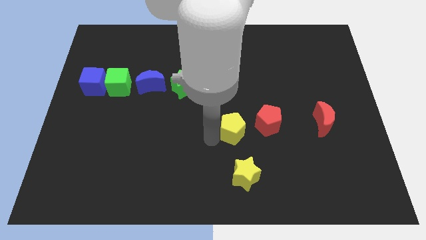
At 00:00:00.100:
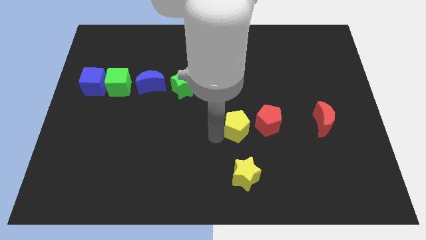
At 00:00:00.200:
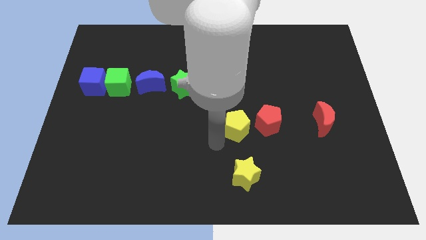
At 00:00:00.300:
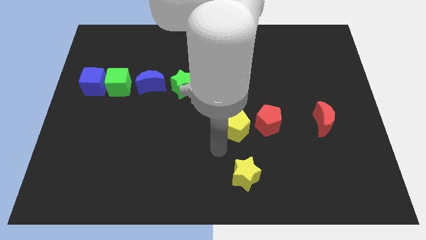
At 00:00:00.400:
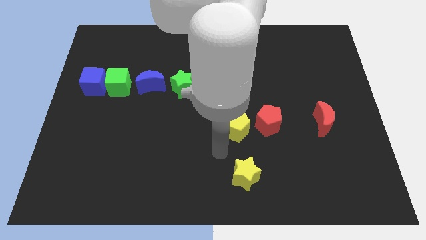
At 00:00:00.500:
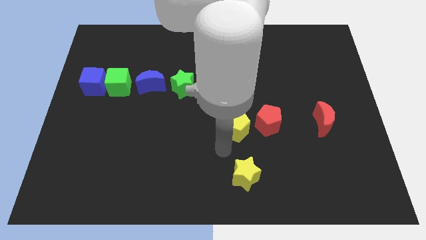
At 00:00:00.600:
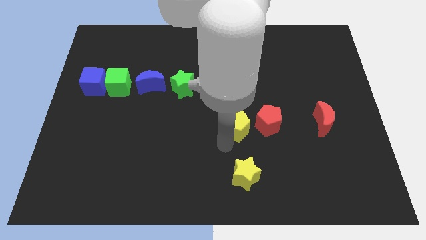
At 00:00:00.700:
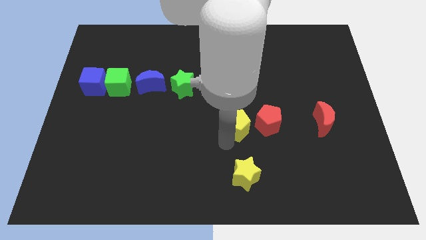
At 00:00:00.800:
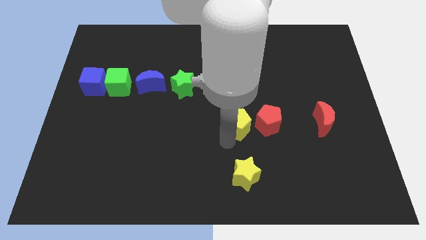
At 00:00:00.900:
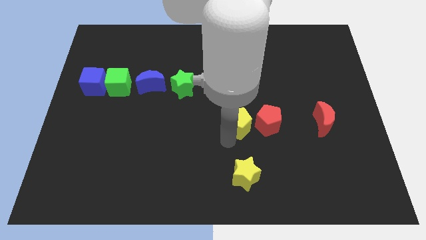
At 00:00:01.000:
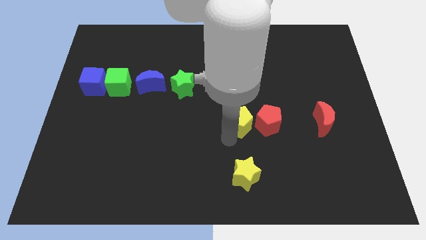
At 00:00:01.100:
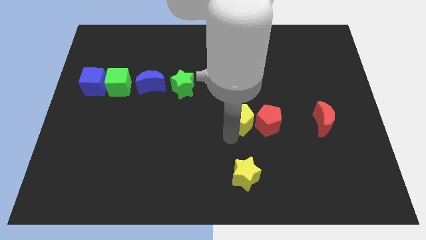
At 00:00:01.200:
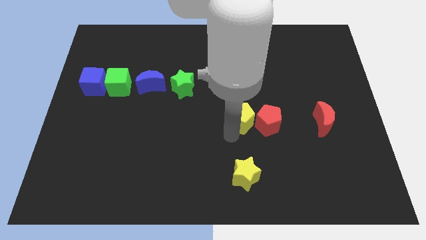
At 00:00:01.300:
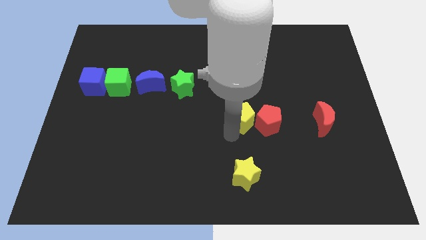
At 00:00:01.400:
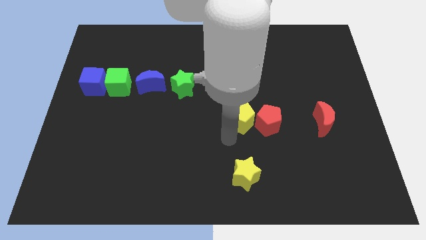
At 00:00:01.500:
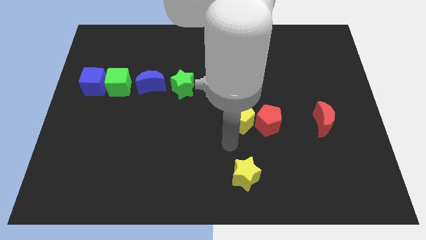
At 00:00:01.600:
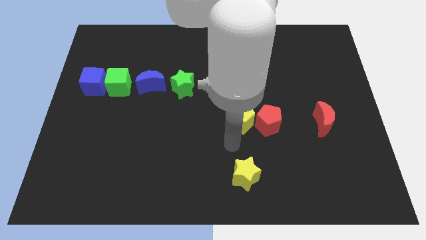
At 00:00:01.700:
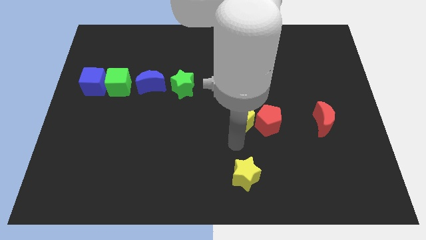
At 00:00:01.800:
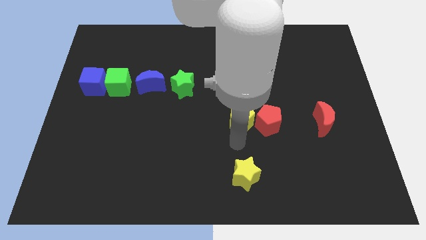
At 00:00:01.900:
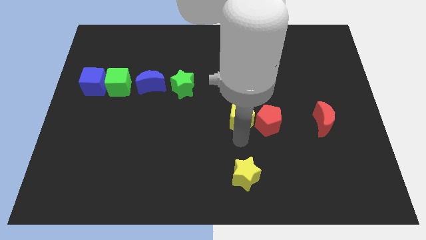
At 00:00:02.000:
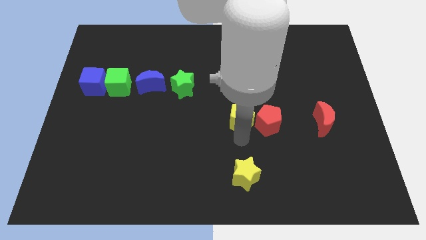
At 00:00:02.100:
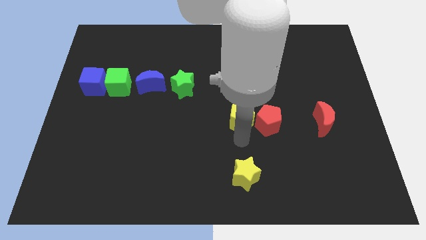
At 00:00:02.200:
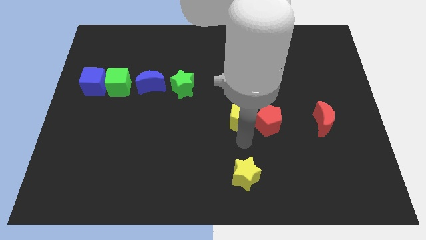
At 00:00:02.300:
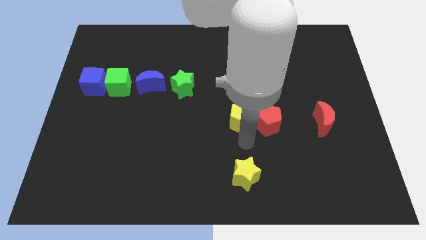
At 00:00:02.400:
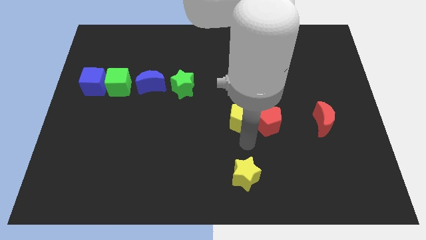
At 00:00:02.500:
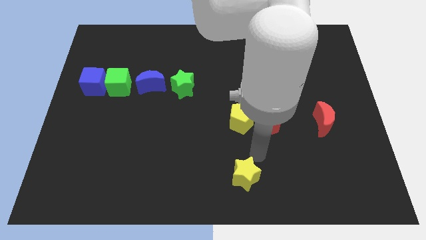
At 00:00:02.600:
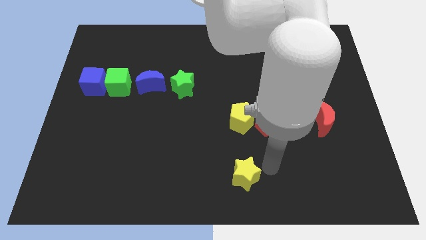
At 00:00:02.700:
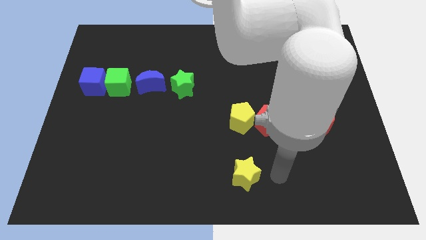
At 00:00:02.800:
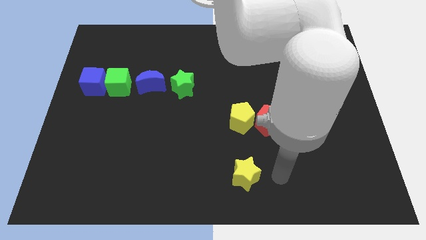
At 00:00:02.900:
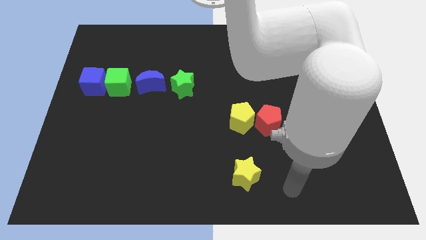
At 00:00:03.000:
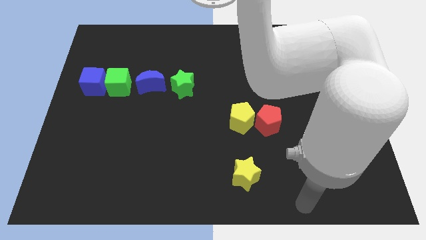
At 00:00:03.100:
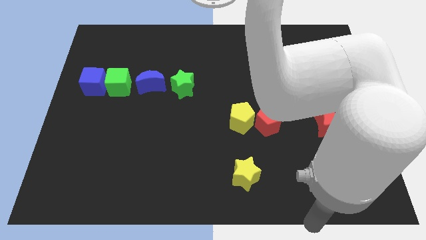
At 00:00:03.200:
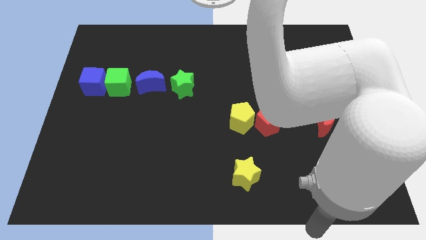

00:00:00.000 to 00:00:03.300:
adjust the yellow pentagon horizontally close left to the red pentagon

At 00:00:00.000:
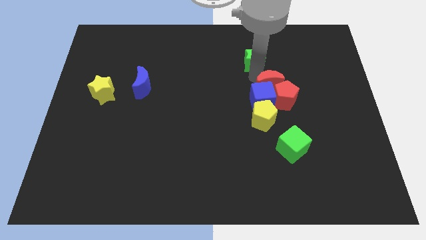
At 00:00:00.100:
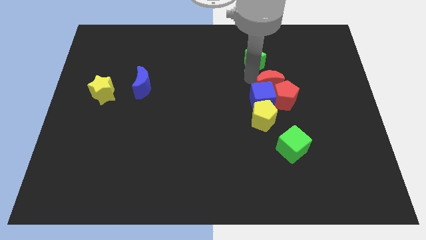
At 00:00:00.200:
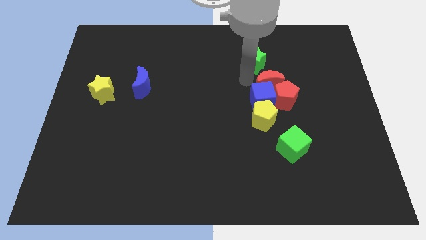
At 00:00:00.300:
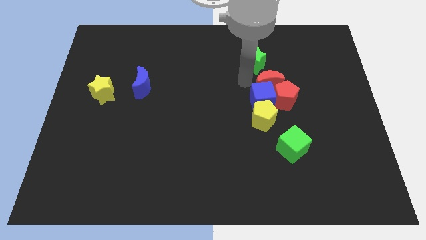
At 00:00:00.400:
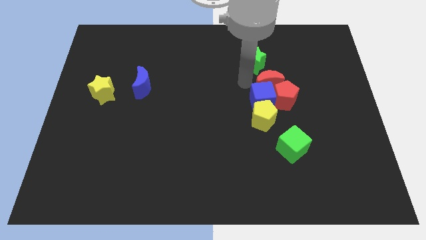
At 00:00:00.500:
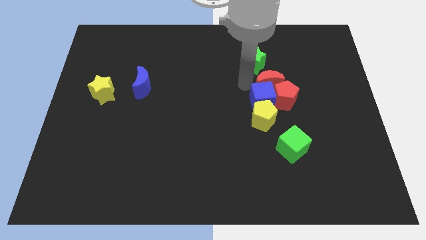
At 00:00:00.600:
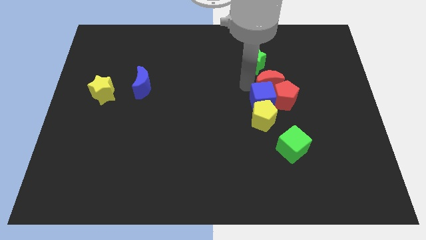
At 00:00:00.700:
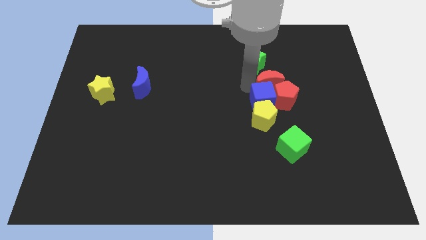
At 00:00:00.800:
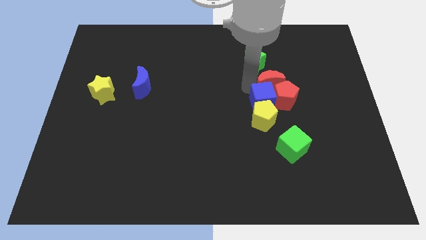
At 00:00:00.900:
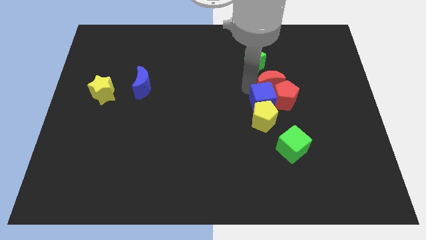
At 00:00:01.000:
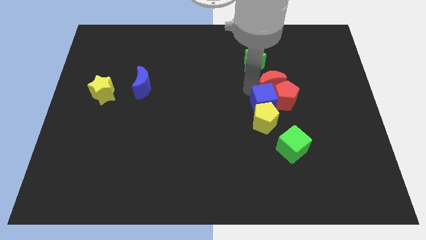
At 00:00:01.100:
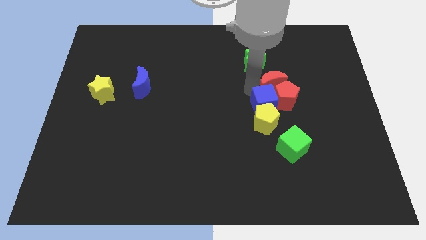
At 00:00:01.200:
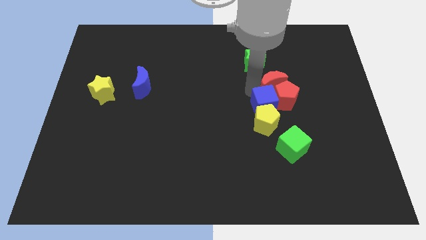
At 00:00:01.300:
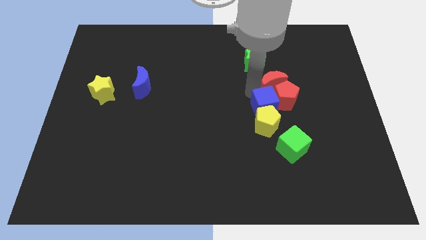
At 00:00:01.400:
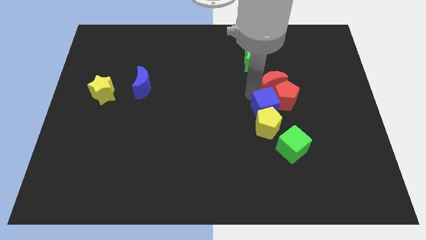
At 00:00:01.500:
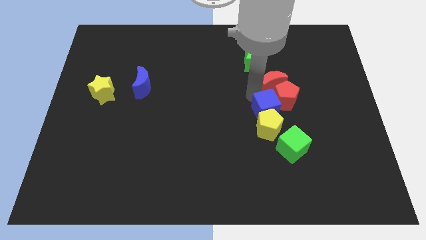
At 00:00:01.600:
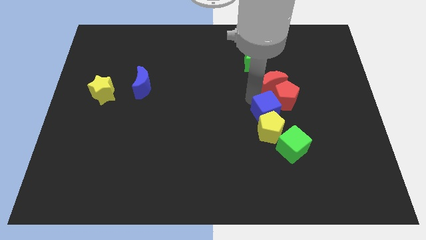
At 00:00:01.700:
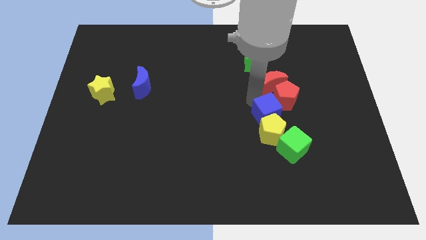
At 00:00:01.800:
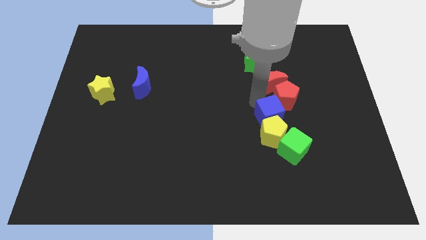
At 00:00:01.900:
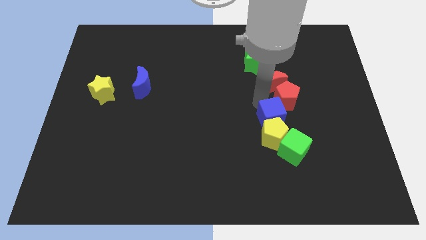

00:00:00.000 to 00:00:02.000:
slightly push the blue cube towards the bottom of the board

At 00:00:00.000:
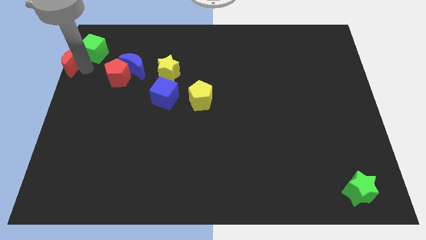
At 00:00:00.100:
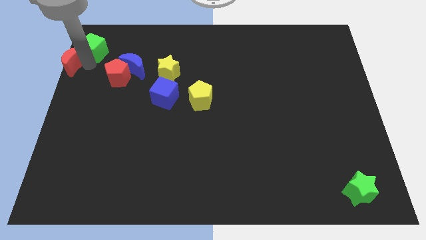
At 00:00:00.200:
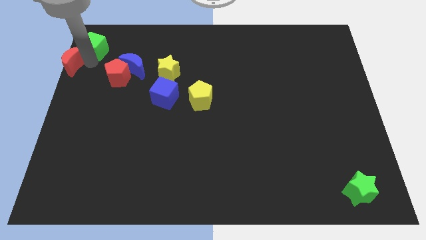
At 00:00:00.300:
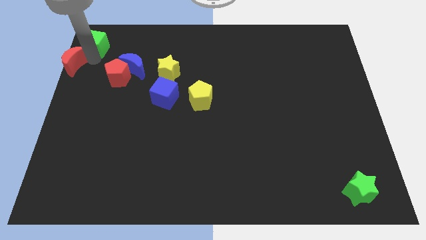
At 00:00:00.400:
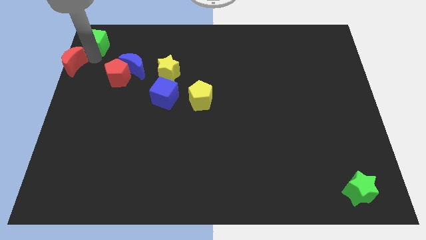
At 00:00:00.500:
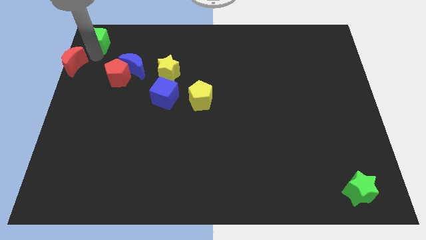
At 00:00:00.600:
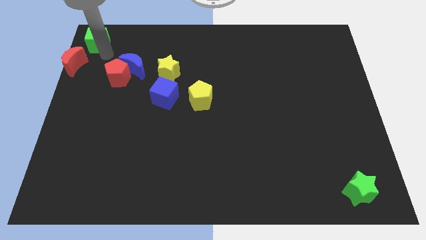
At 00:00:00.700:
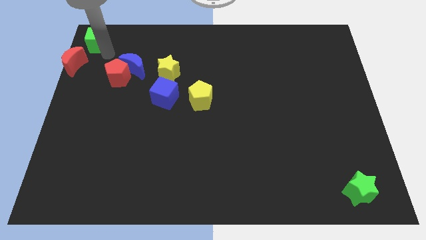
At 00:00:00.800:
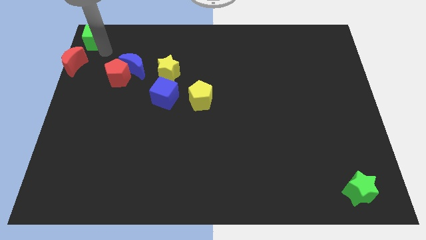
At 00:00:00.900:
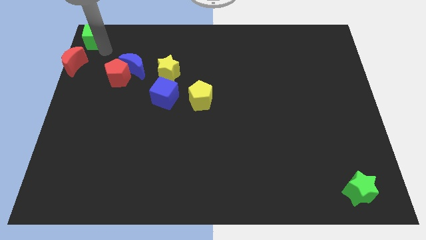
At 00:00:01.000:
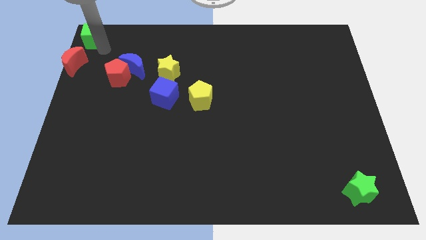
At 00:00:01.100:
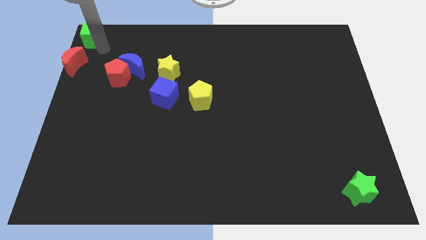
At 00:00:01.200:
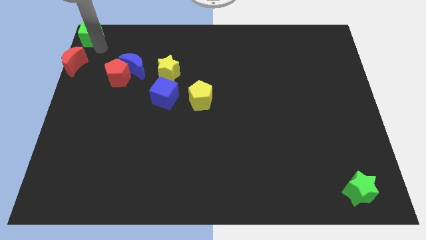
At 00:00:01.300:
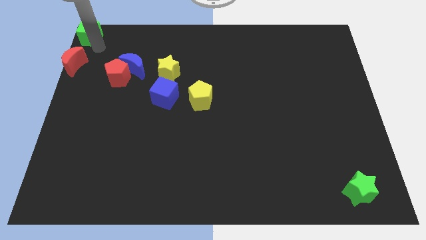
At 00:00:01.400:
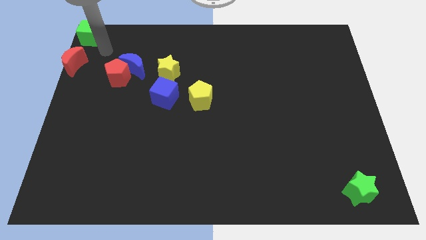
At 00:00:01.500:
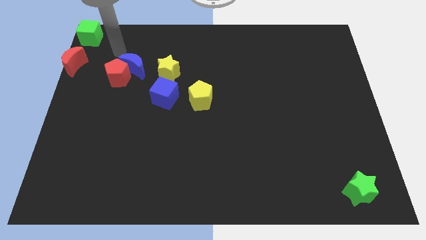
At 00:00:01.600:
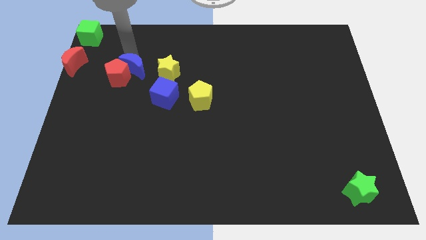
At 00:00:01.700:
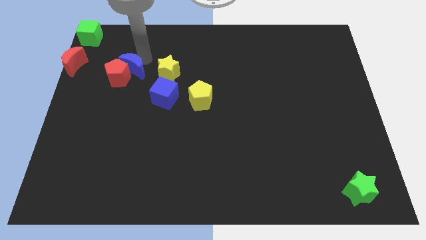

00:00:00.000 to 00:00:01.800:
place the green cube to the top left corner of the board

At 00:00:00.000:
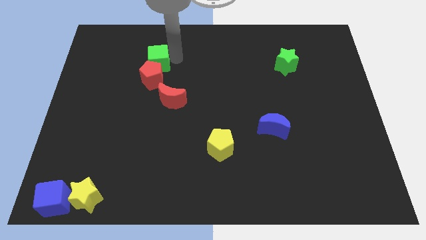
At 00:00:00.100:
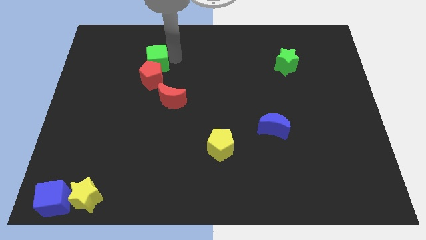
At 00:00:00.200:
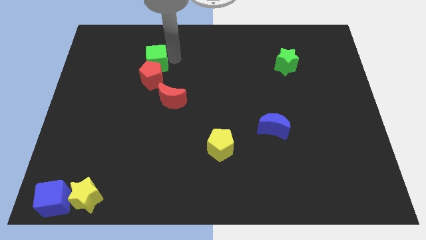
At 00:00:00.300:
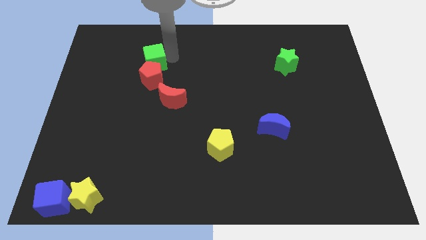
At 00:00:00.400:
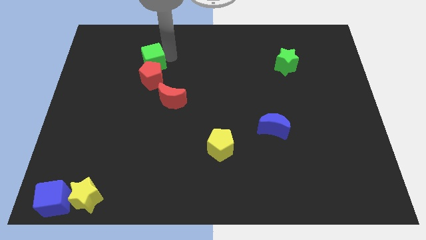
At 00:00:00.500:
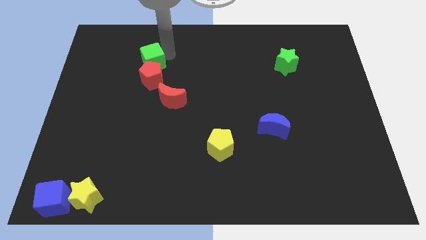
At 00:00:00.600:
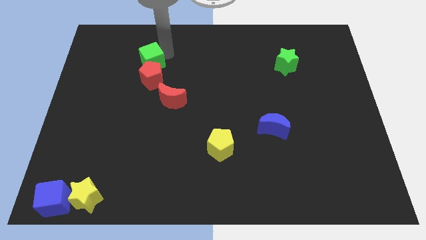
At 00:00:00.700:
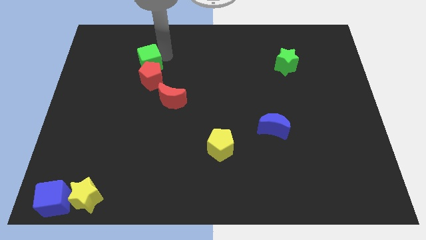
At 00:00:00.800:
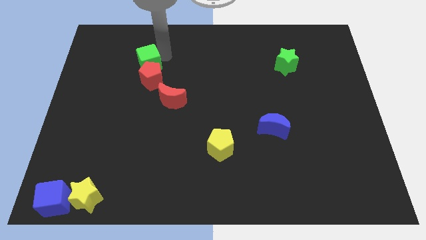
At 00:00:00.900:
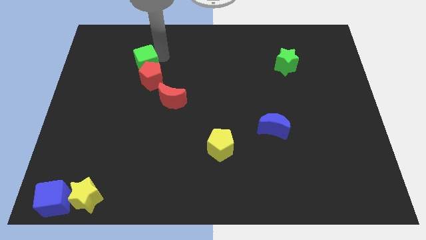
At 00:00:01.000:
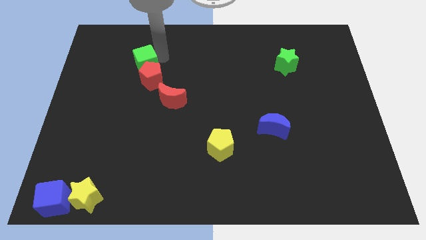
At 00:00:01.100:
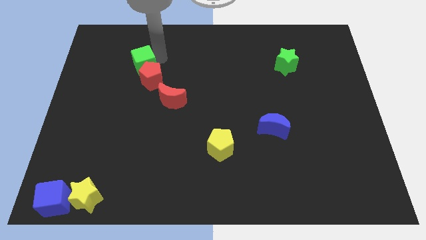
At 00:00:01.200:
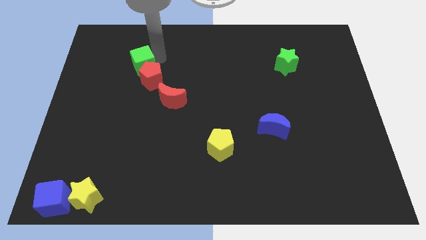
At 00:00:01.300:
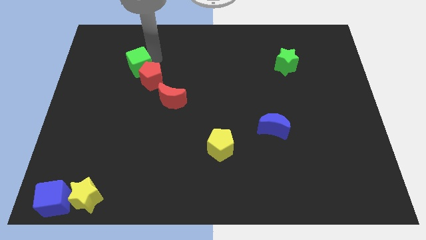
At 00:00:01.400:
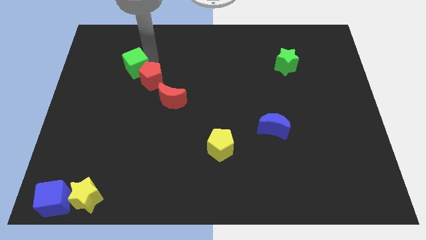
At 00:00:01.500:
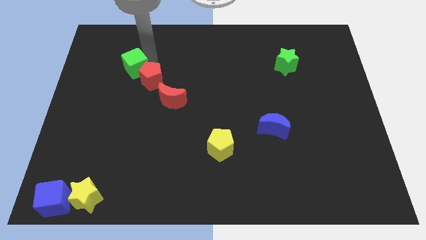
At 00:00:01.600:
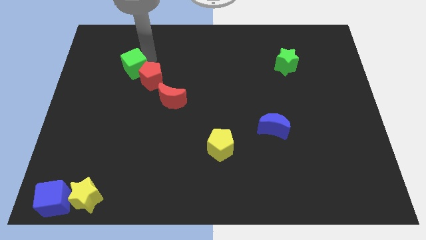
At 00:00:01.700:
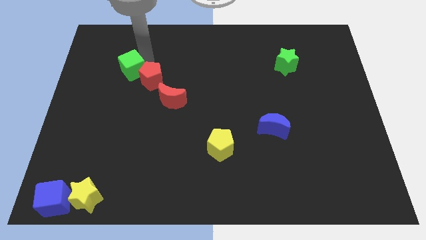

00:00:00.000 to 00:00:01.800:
move the green cube slightly to the left of the board
